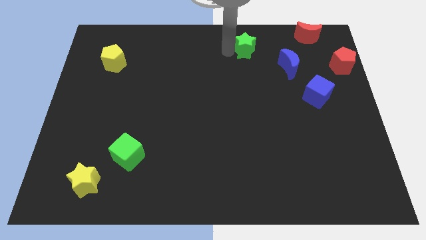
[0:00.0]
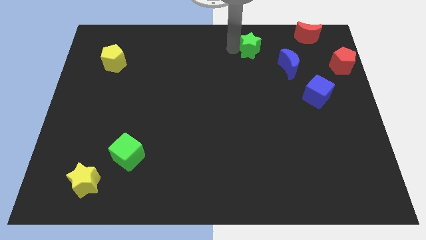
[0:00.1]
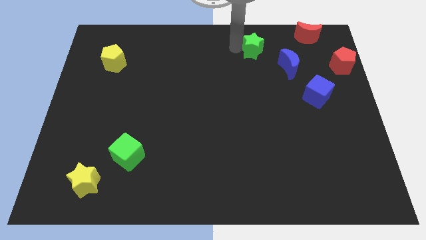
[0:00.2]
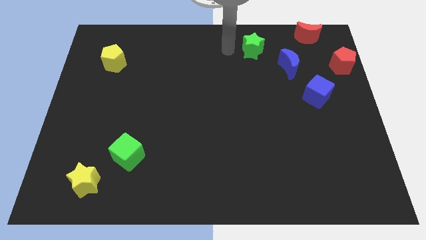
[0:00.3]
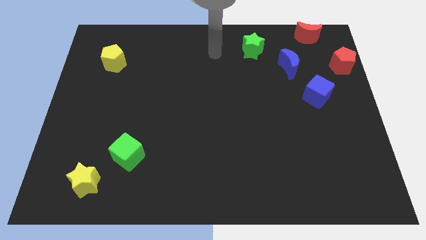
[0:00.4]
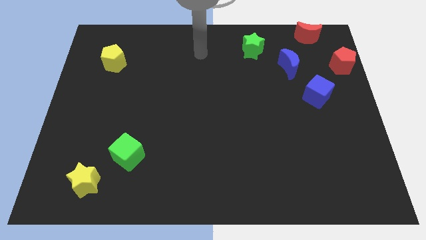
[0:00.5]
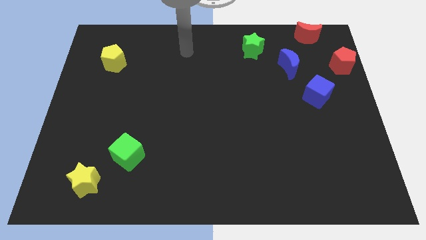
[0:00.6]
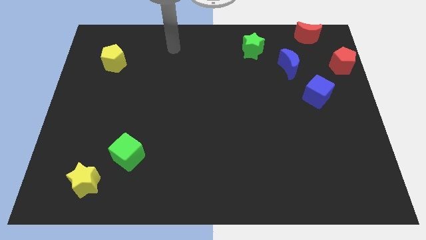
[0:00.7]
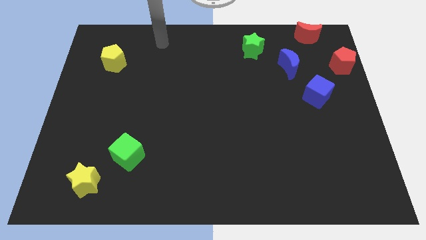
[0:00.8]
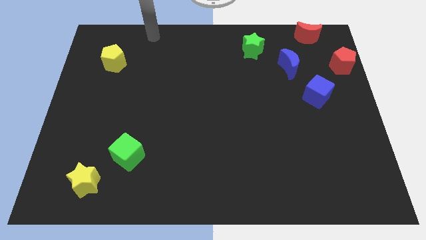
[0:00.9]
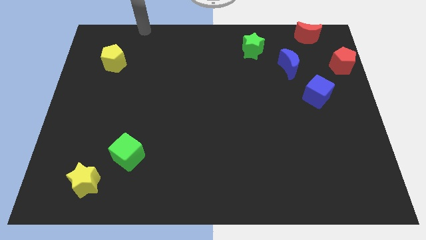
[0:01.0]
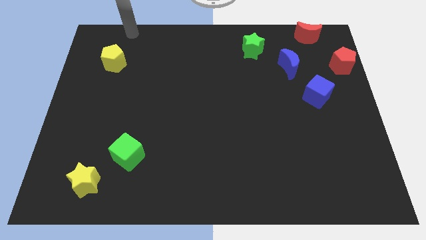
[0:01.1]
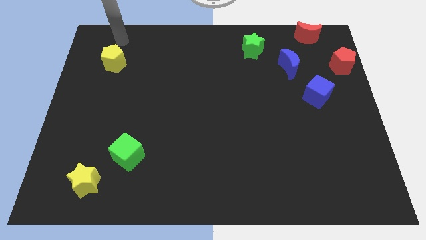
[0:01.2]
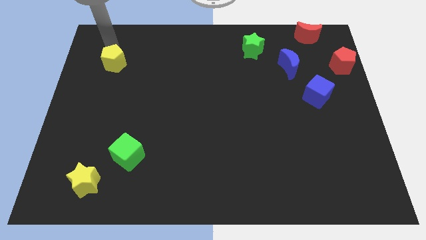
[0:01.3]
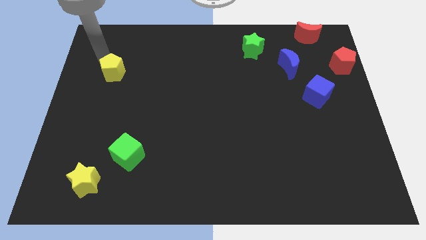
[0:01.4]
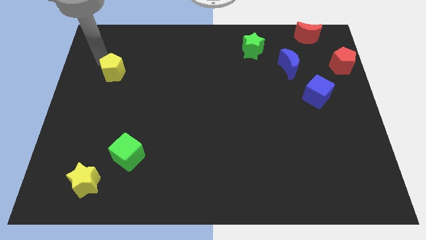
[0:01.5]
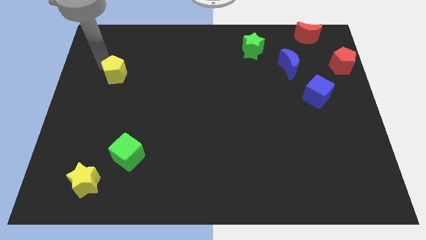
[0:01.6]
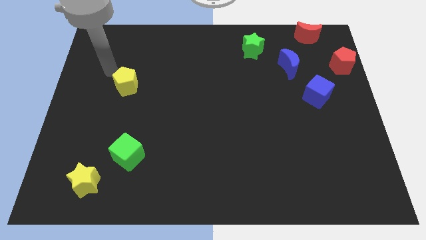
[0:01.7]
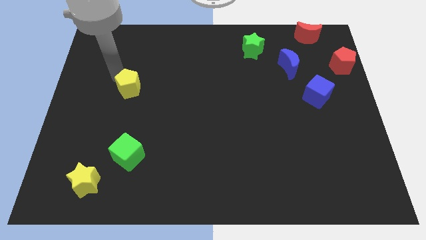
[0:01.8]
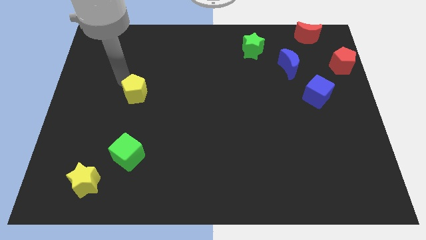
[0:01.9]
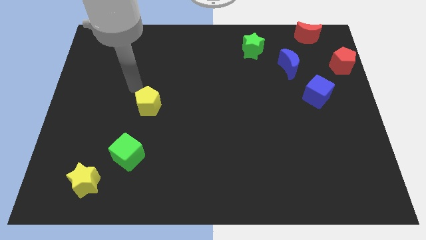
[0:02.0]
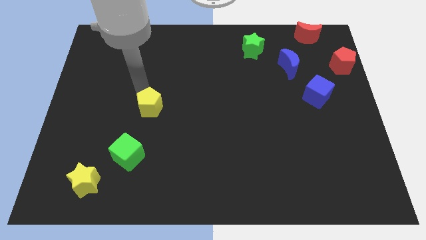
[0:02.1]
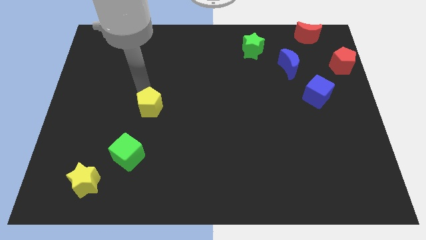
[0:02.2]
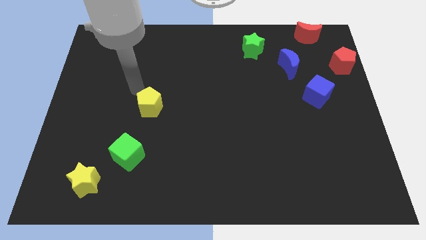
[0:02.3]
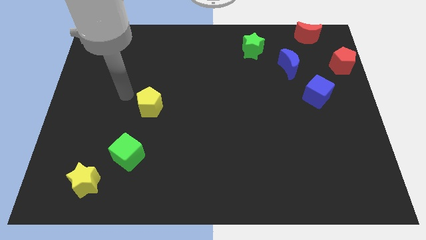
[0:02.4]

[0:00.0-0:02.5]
push the yellow pentagon to the top right of the green cube

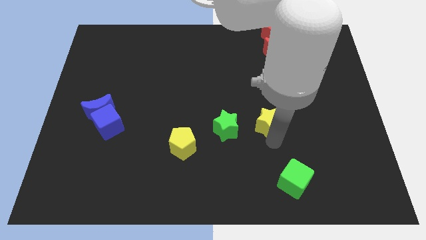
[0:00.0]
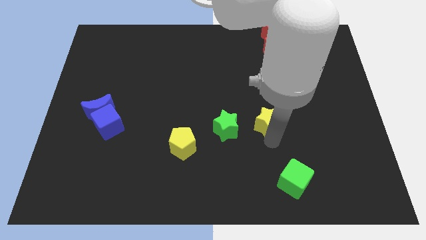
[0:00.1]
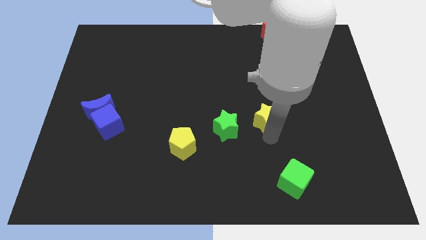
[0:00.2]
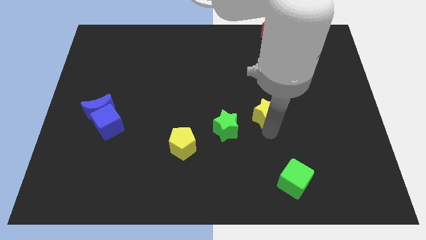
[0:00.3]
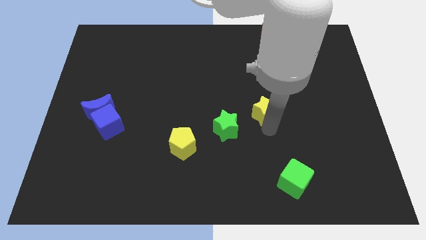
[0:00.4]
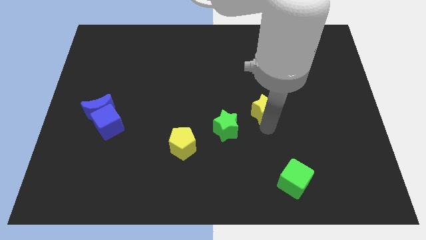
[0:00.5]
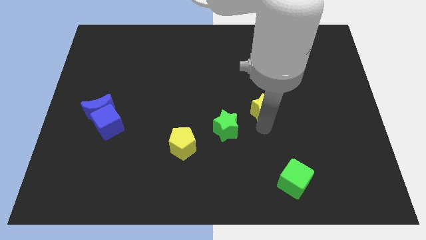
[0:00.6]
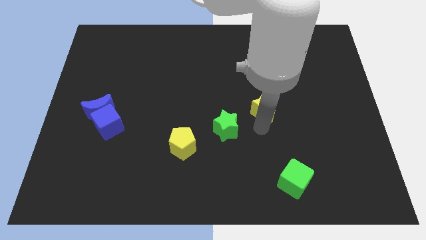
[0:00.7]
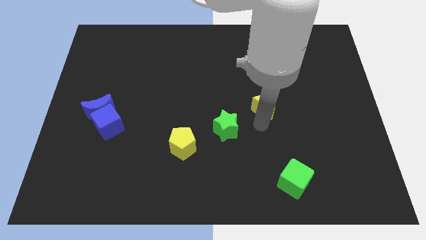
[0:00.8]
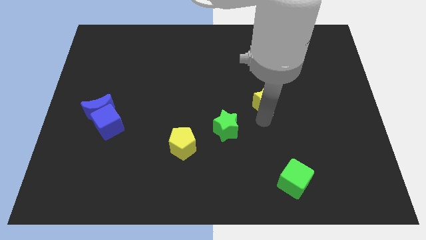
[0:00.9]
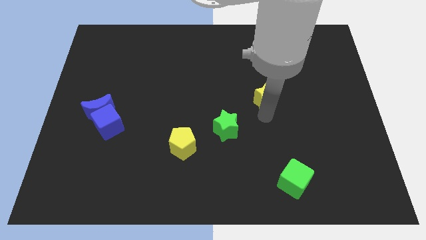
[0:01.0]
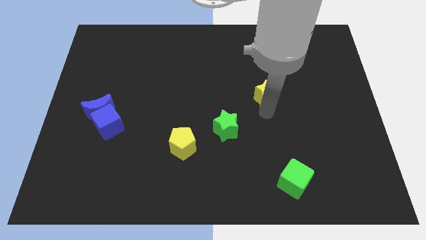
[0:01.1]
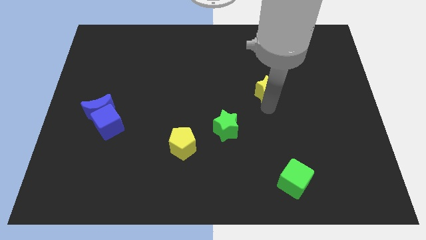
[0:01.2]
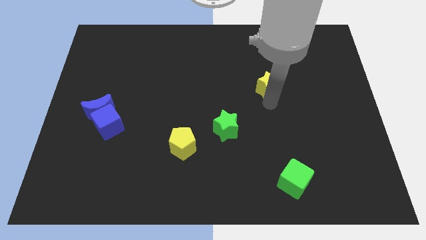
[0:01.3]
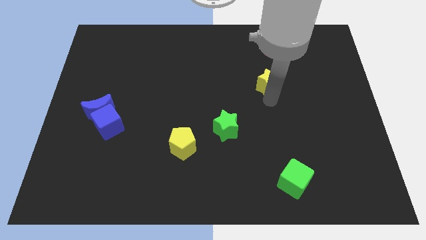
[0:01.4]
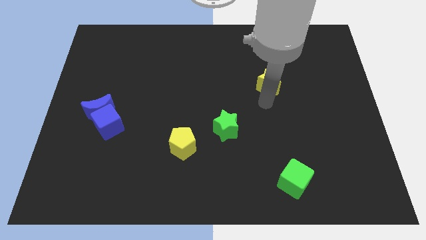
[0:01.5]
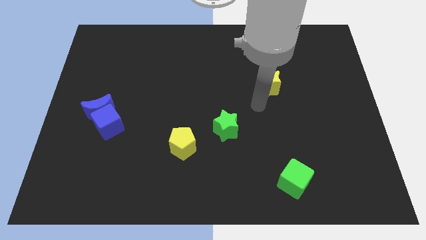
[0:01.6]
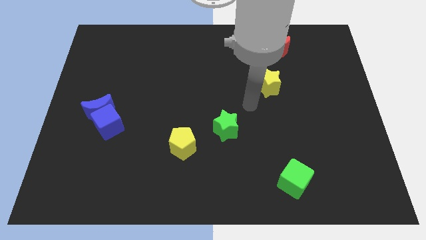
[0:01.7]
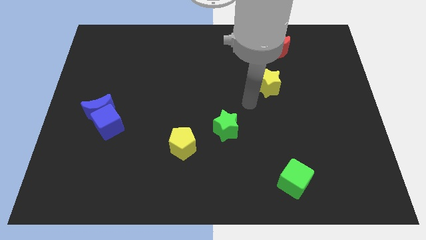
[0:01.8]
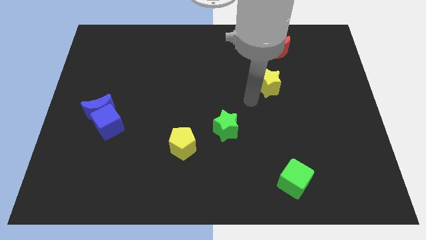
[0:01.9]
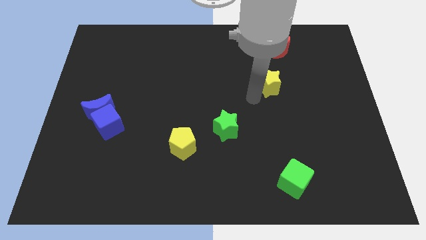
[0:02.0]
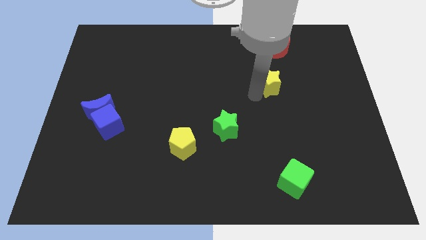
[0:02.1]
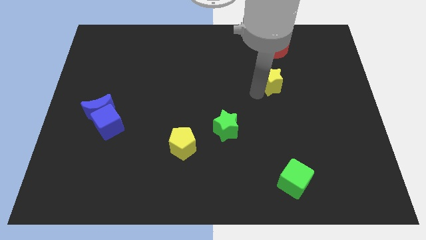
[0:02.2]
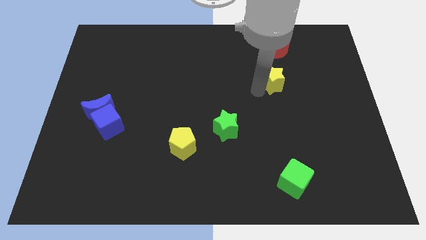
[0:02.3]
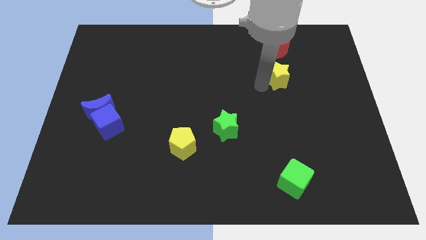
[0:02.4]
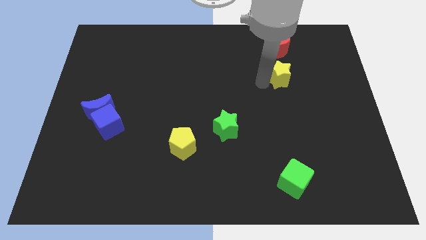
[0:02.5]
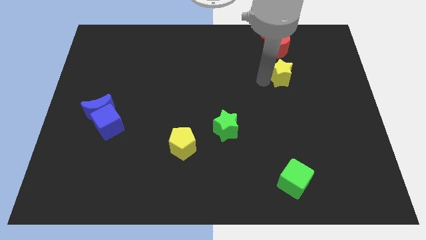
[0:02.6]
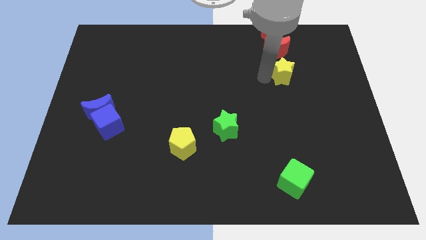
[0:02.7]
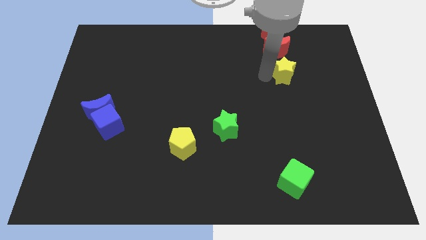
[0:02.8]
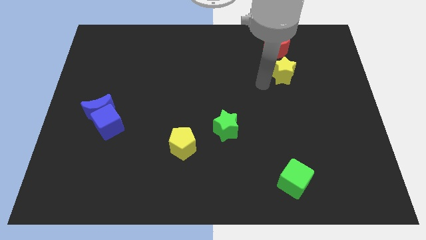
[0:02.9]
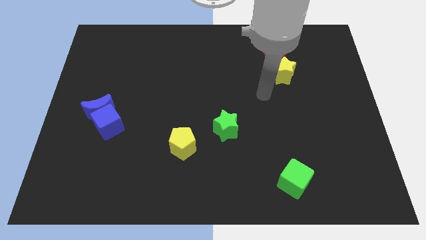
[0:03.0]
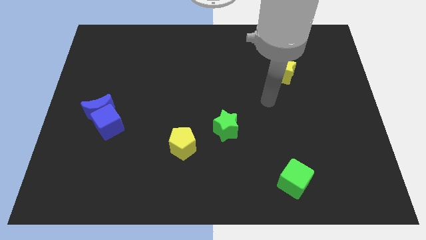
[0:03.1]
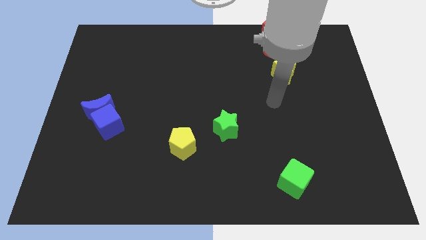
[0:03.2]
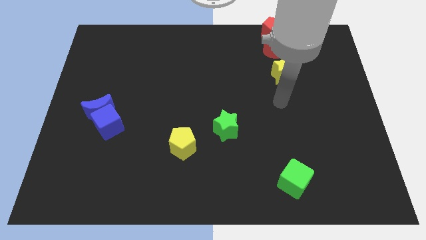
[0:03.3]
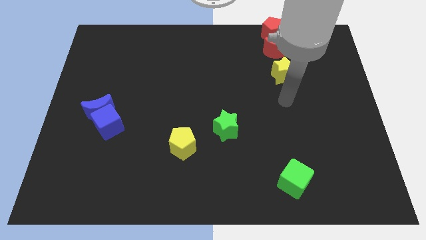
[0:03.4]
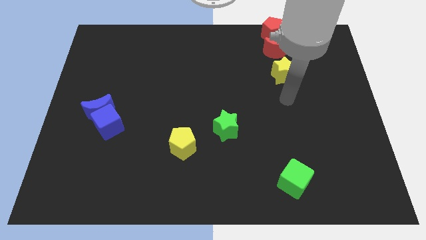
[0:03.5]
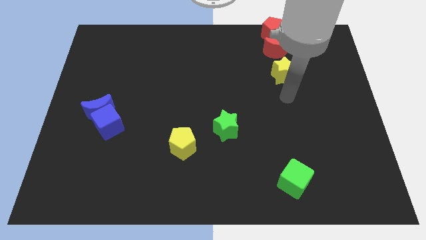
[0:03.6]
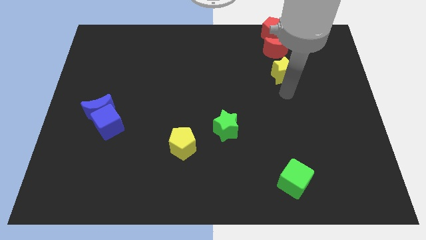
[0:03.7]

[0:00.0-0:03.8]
push yellow star below the red moon

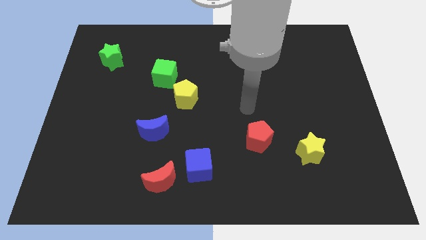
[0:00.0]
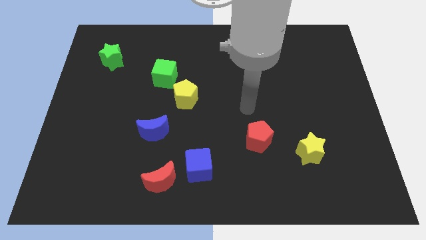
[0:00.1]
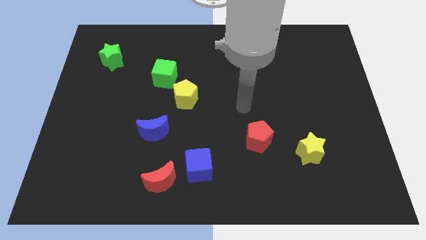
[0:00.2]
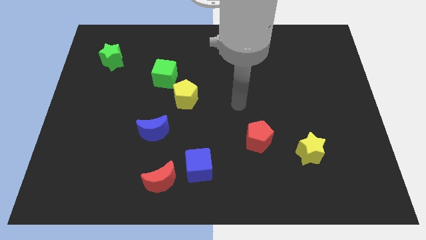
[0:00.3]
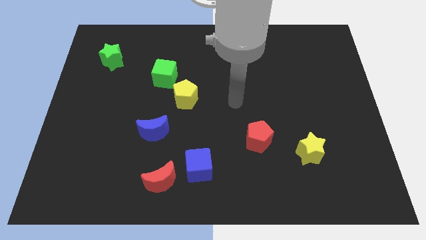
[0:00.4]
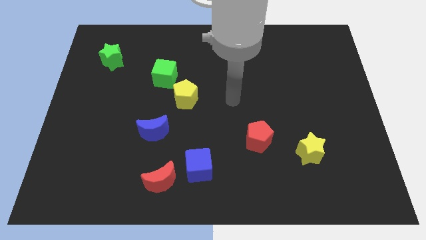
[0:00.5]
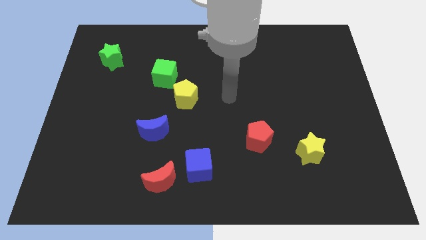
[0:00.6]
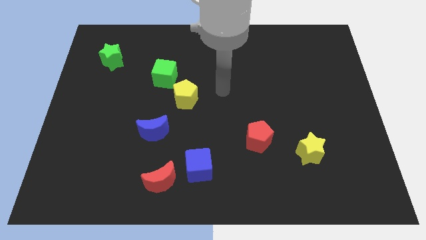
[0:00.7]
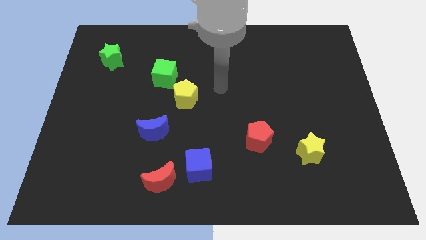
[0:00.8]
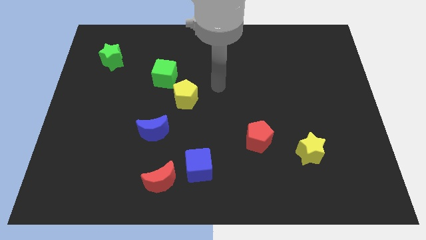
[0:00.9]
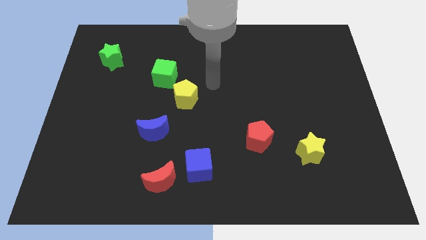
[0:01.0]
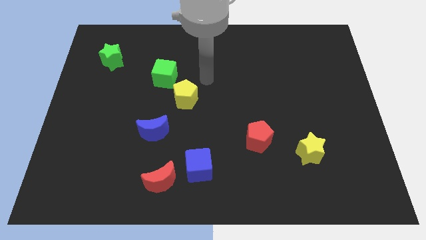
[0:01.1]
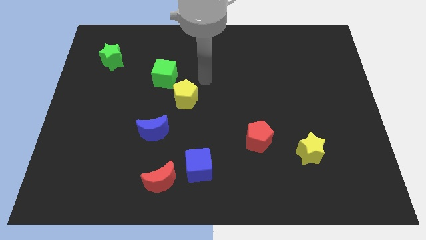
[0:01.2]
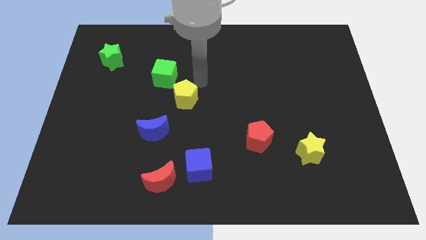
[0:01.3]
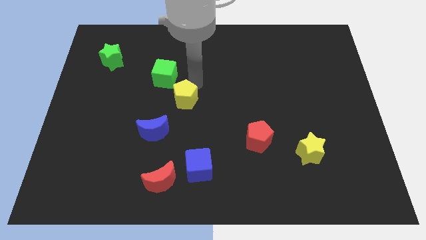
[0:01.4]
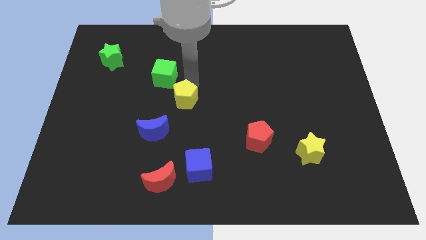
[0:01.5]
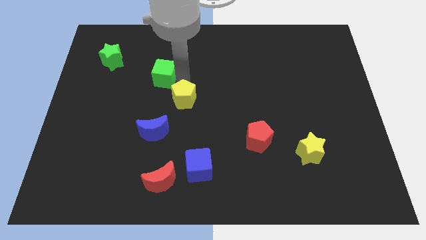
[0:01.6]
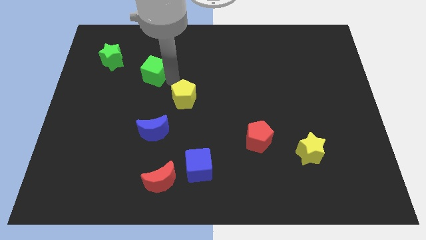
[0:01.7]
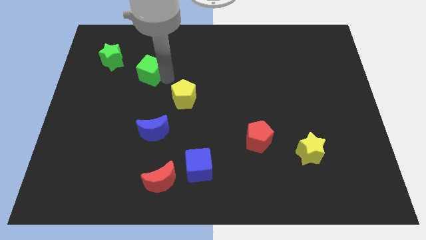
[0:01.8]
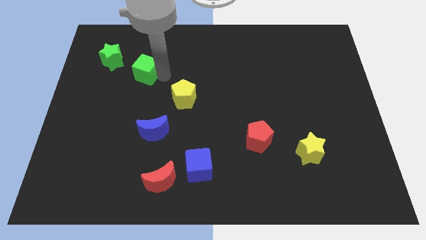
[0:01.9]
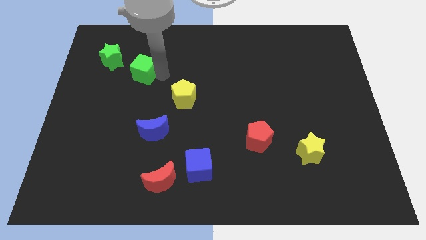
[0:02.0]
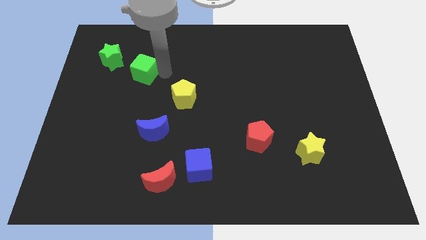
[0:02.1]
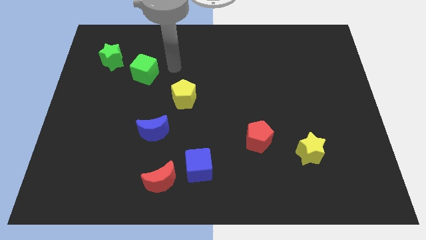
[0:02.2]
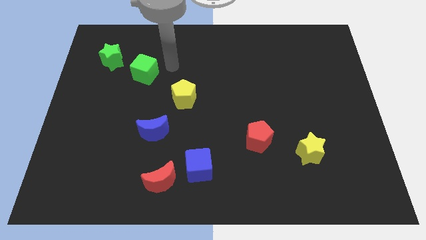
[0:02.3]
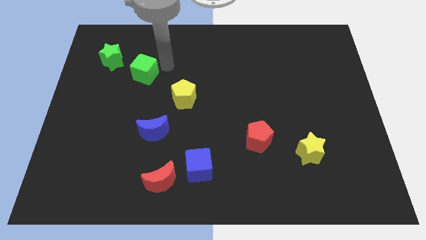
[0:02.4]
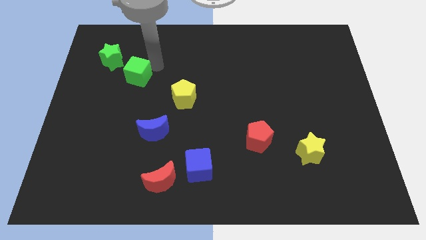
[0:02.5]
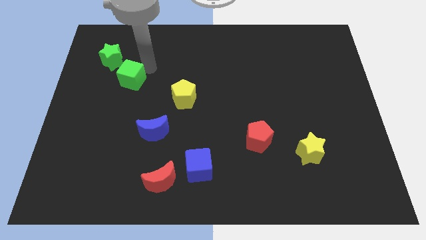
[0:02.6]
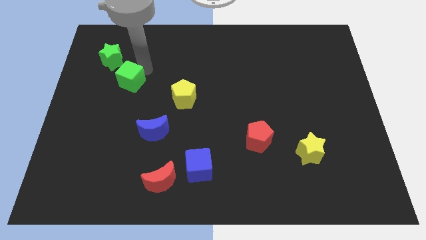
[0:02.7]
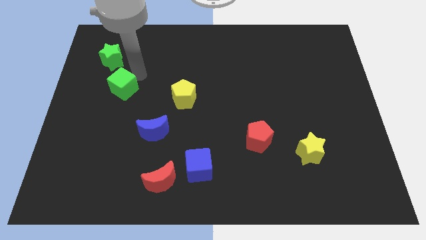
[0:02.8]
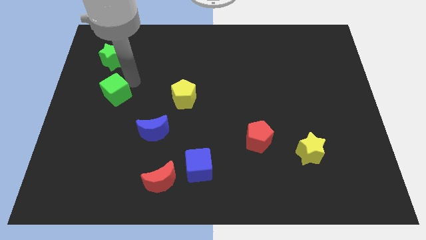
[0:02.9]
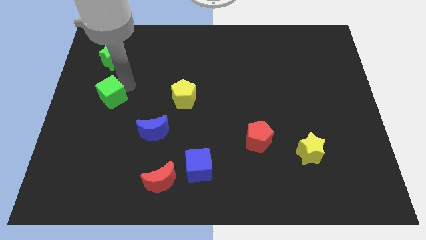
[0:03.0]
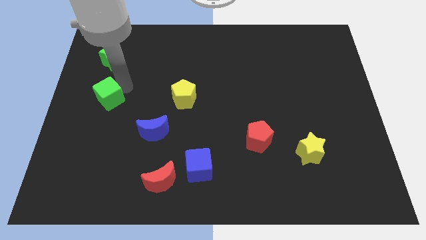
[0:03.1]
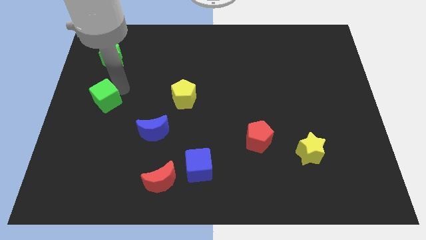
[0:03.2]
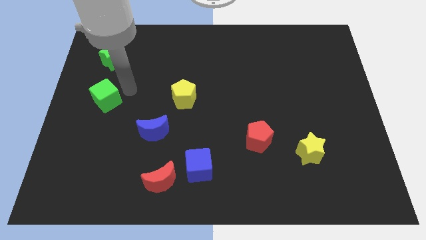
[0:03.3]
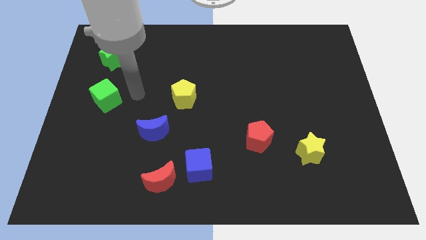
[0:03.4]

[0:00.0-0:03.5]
place green cube to the bottom of green star
